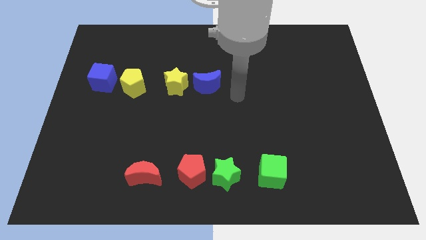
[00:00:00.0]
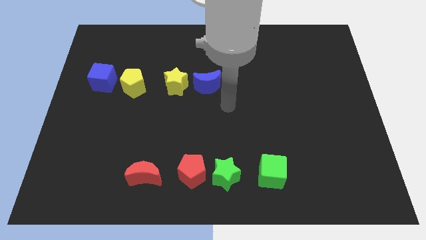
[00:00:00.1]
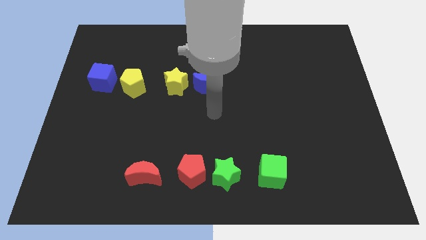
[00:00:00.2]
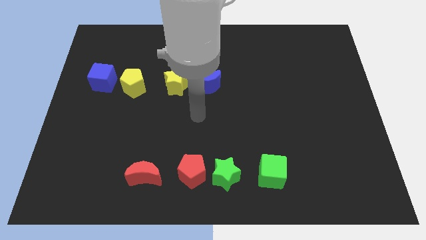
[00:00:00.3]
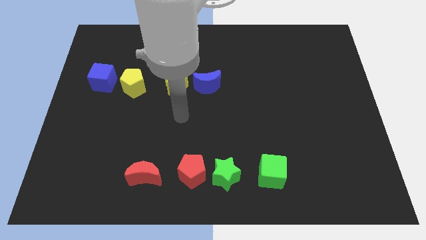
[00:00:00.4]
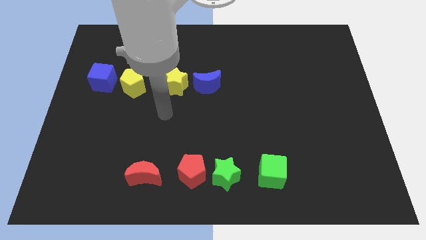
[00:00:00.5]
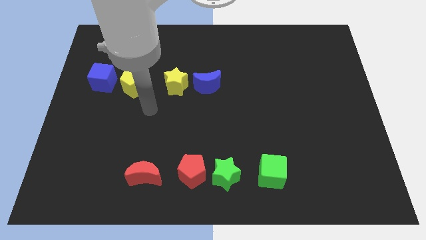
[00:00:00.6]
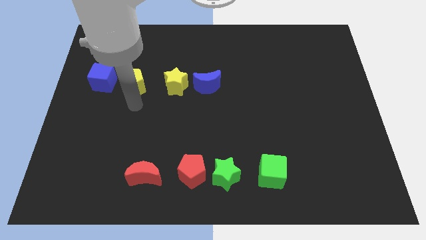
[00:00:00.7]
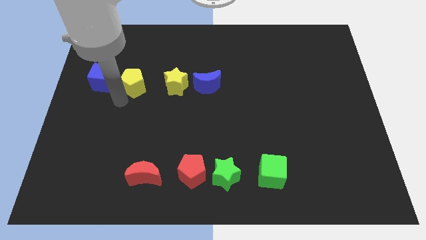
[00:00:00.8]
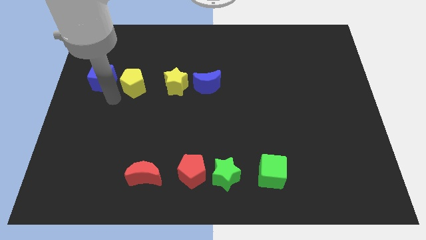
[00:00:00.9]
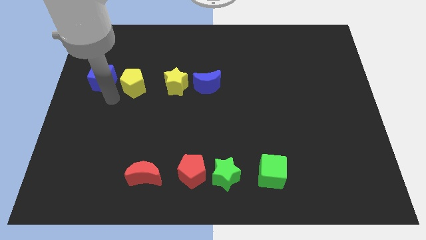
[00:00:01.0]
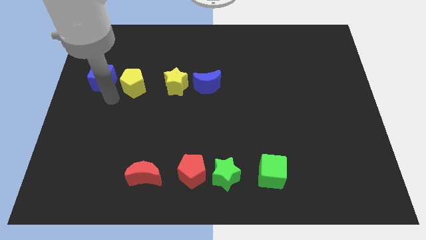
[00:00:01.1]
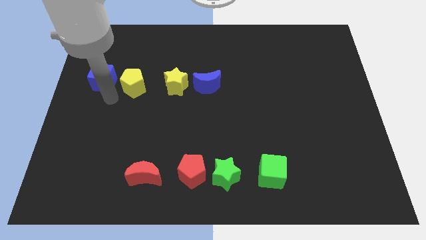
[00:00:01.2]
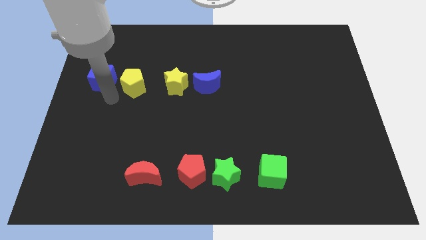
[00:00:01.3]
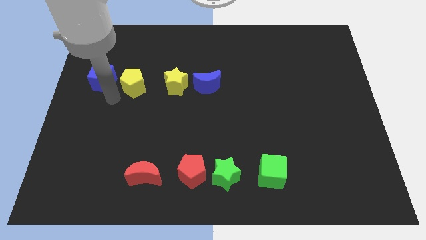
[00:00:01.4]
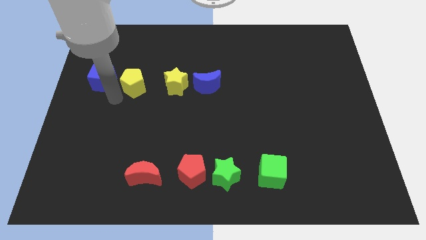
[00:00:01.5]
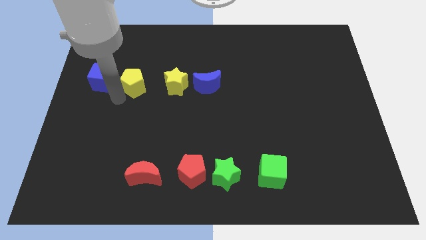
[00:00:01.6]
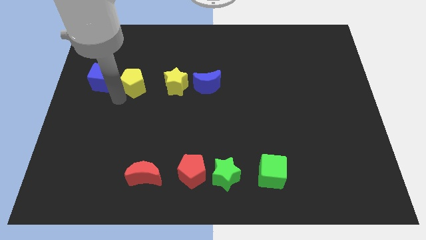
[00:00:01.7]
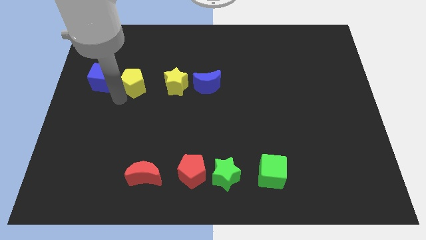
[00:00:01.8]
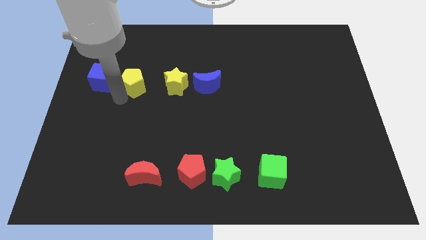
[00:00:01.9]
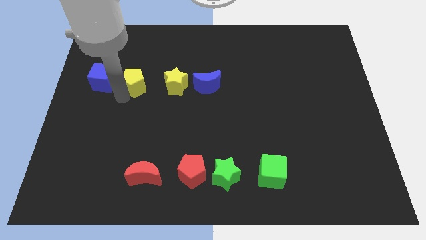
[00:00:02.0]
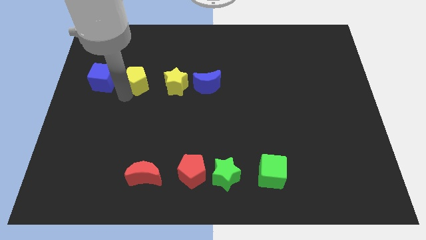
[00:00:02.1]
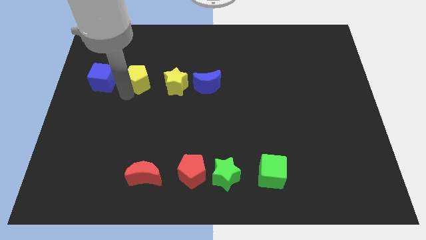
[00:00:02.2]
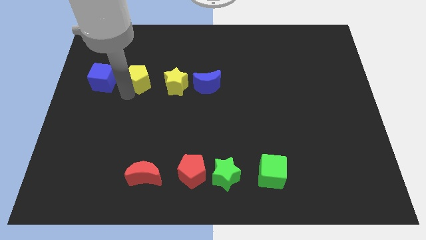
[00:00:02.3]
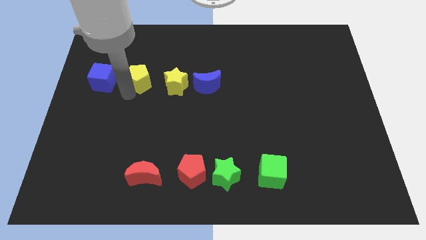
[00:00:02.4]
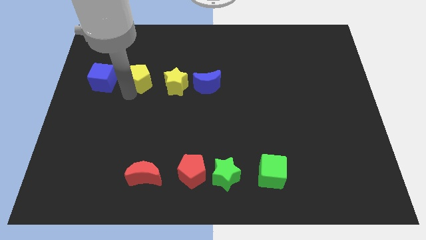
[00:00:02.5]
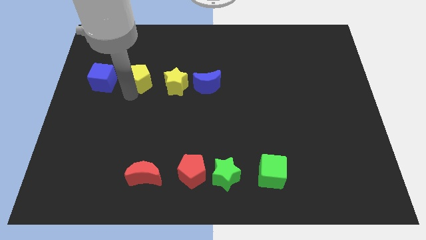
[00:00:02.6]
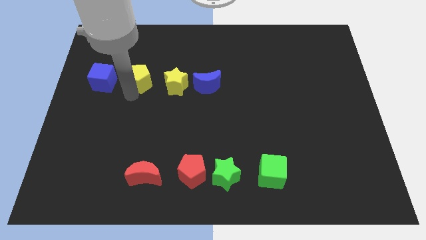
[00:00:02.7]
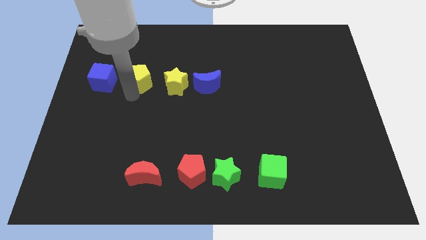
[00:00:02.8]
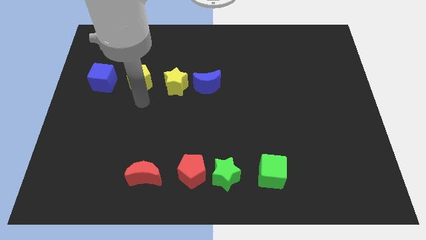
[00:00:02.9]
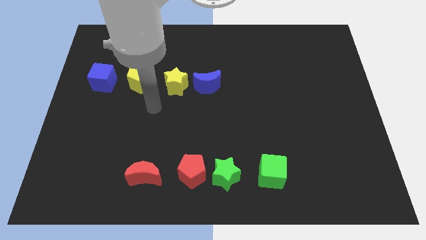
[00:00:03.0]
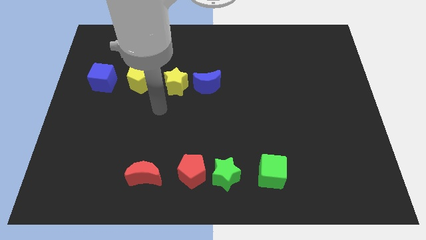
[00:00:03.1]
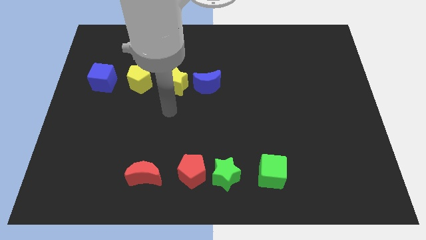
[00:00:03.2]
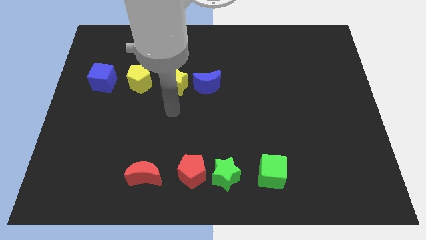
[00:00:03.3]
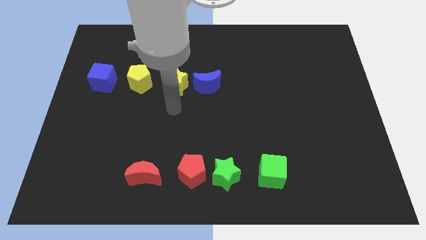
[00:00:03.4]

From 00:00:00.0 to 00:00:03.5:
slightly push the yellow pentagon up

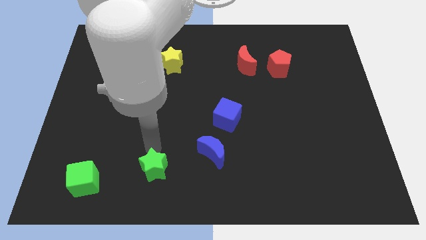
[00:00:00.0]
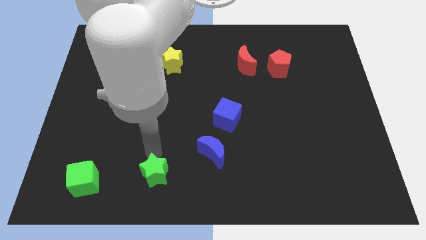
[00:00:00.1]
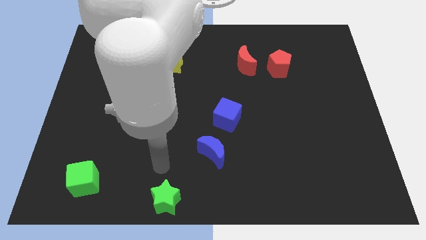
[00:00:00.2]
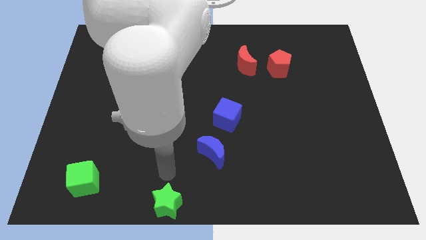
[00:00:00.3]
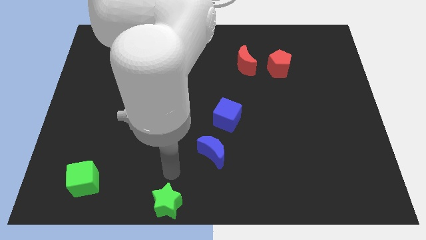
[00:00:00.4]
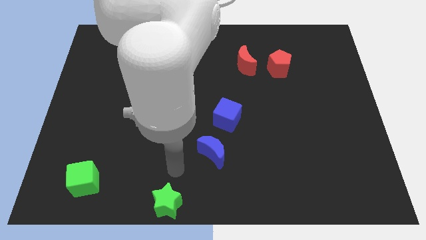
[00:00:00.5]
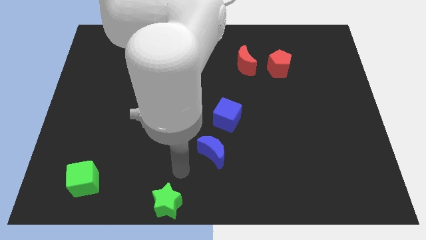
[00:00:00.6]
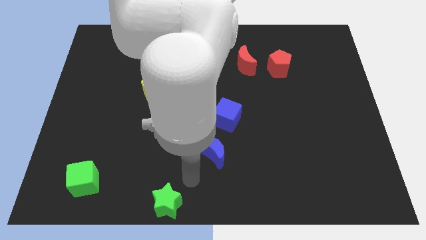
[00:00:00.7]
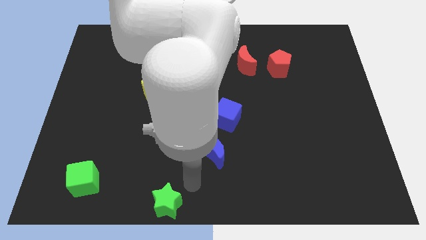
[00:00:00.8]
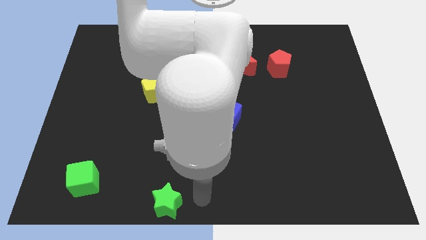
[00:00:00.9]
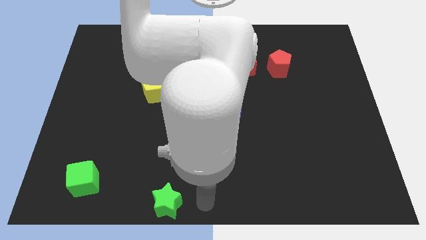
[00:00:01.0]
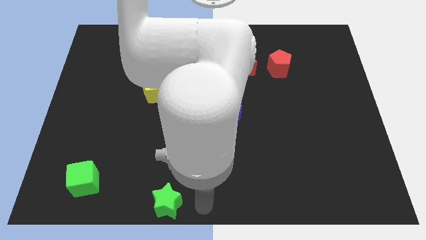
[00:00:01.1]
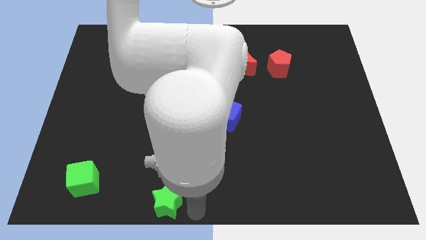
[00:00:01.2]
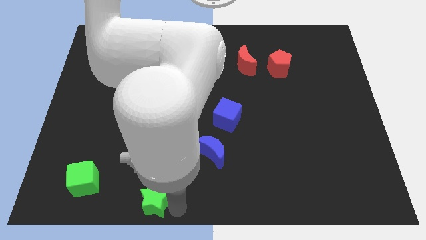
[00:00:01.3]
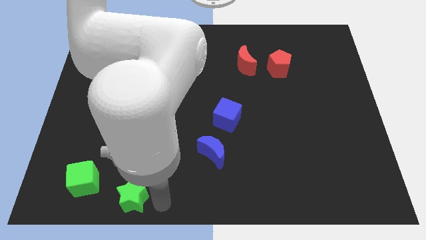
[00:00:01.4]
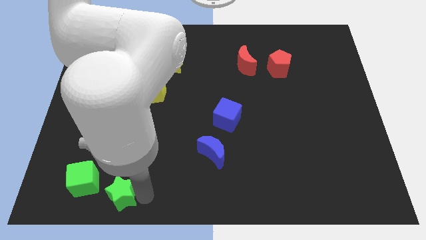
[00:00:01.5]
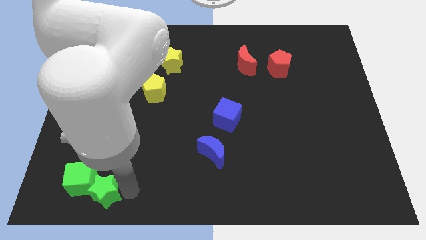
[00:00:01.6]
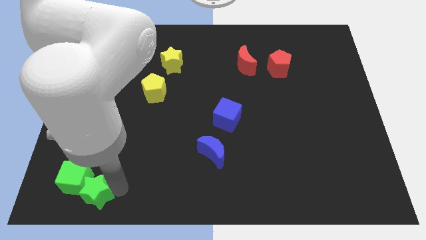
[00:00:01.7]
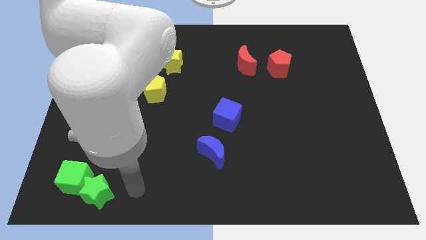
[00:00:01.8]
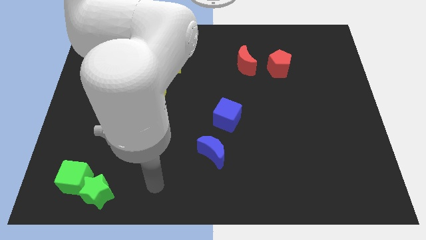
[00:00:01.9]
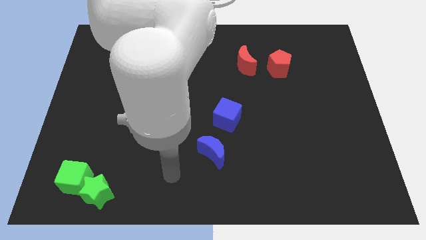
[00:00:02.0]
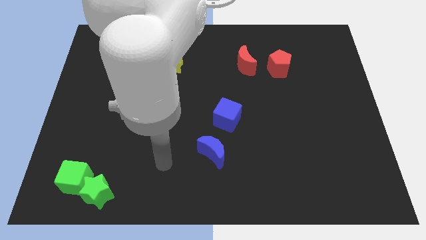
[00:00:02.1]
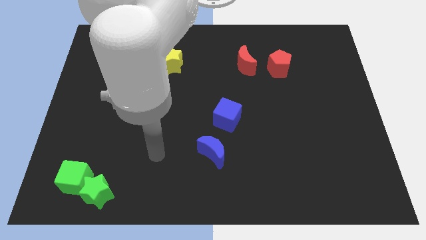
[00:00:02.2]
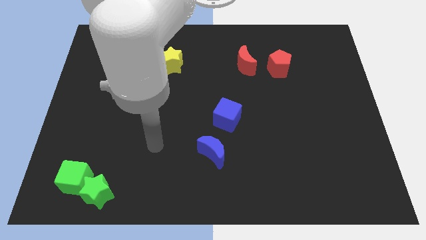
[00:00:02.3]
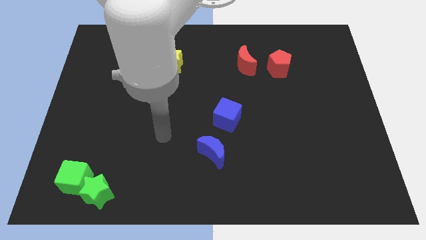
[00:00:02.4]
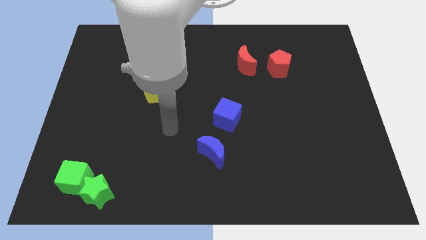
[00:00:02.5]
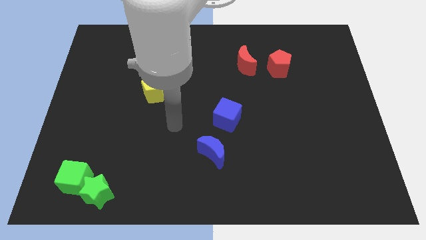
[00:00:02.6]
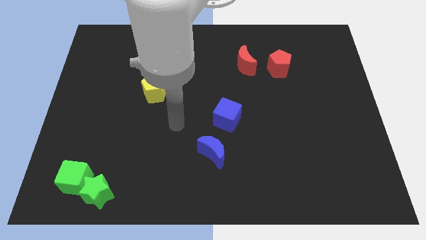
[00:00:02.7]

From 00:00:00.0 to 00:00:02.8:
push the green star into the green cube

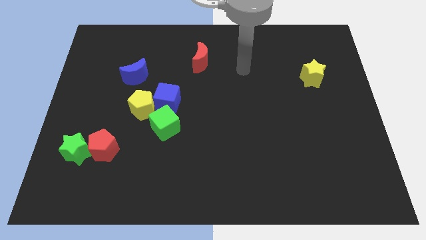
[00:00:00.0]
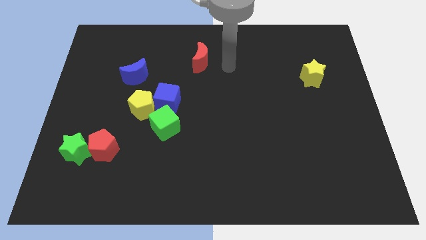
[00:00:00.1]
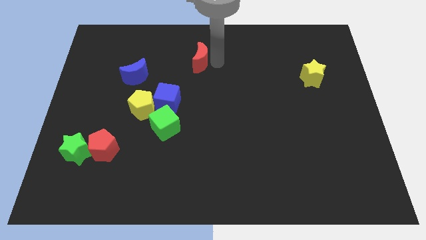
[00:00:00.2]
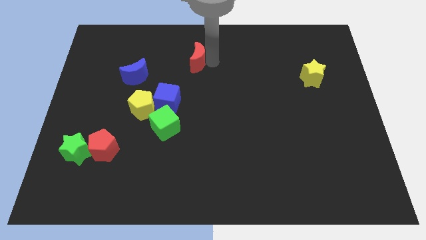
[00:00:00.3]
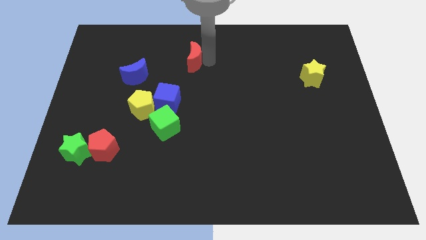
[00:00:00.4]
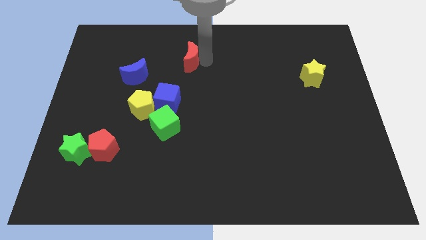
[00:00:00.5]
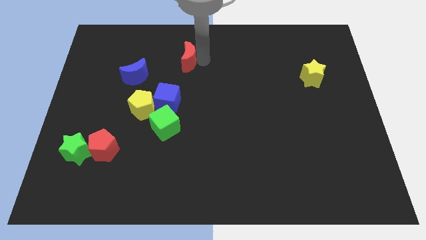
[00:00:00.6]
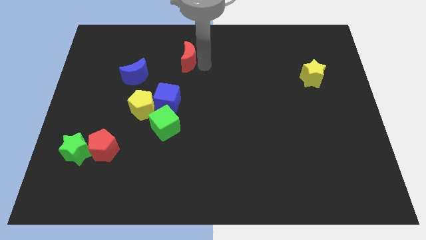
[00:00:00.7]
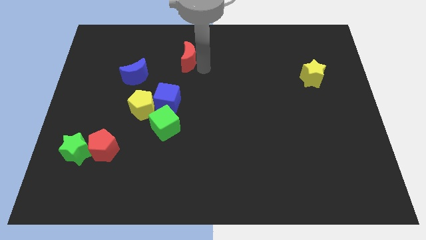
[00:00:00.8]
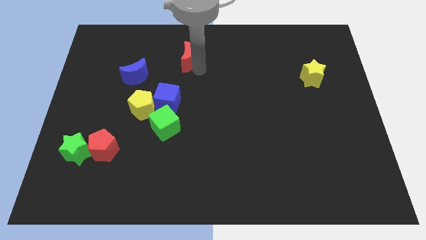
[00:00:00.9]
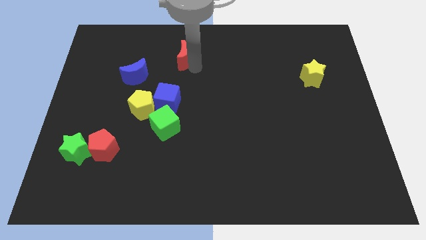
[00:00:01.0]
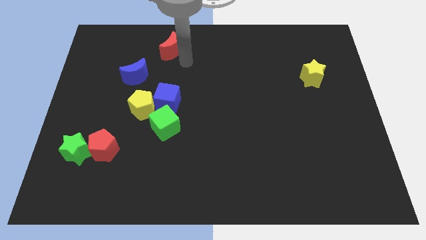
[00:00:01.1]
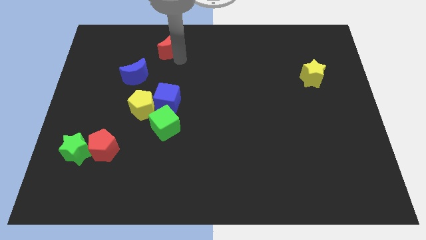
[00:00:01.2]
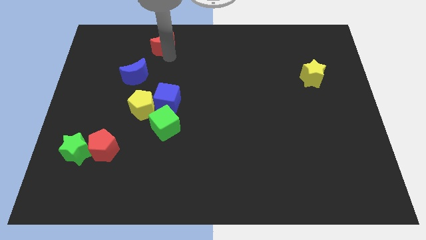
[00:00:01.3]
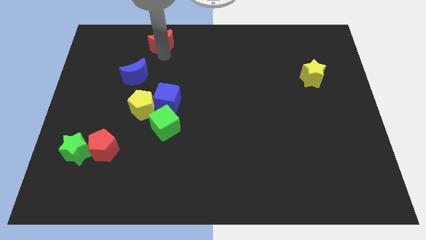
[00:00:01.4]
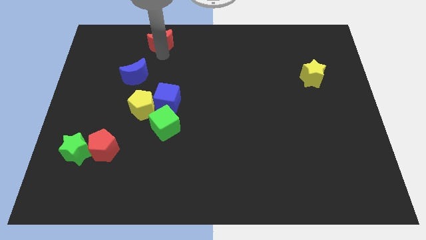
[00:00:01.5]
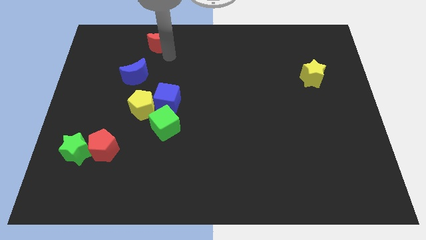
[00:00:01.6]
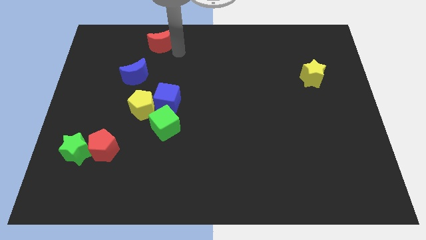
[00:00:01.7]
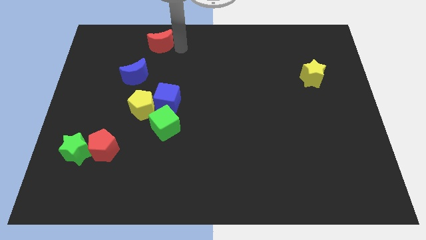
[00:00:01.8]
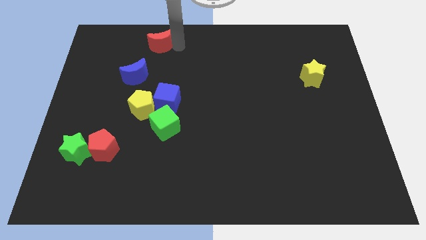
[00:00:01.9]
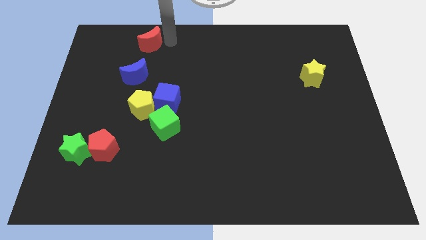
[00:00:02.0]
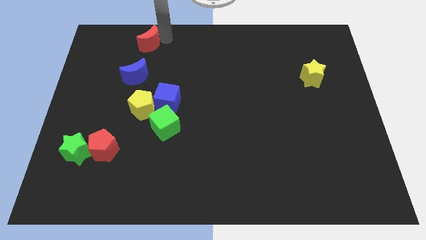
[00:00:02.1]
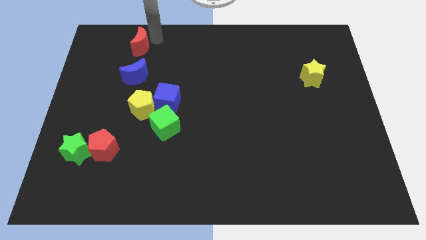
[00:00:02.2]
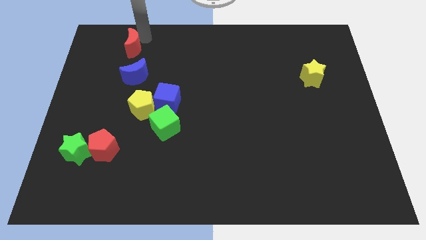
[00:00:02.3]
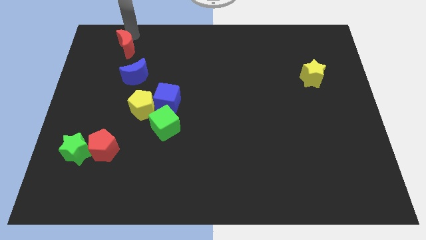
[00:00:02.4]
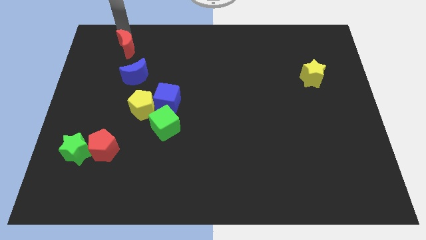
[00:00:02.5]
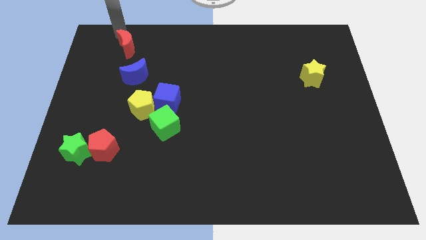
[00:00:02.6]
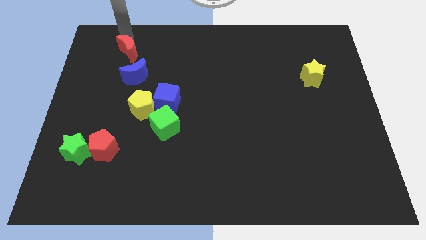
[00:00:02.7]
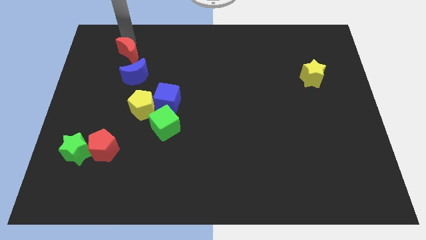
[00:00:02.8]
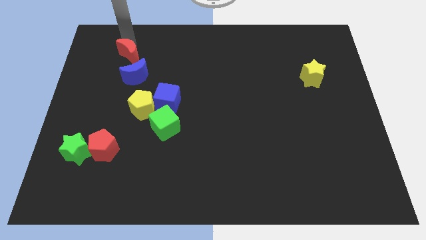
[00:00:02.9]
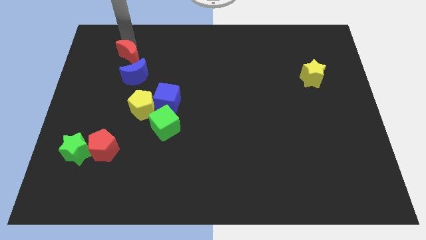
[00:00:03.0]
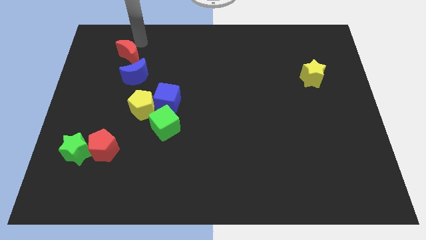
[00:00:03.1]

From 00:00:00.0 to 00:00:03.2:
place the red moon at the top of the blue moon
